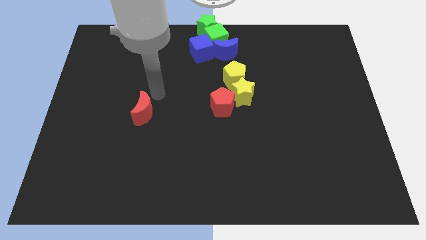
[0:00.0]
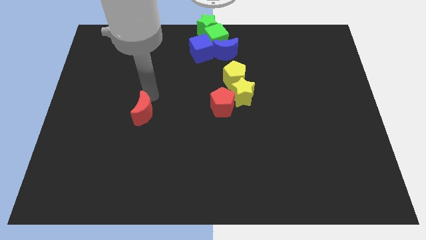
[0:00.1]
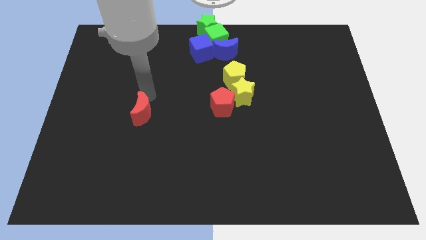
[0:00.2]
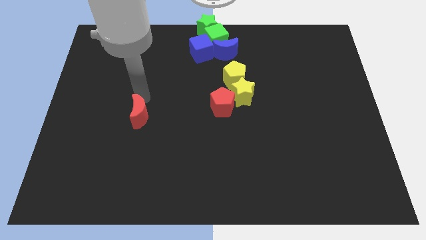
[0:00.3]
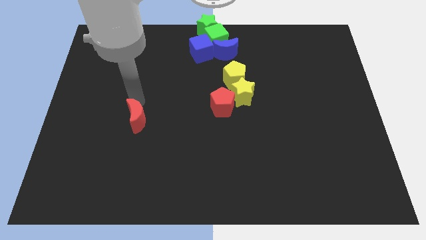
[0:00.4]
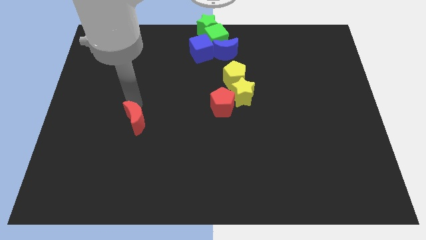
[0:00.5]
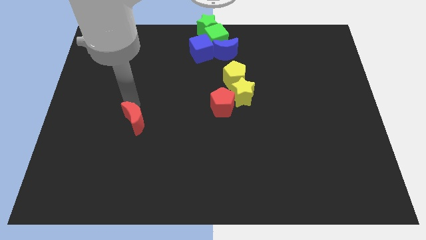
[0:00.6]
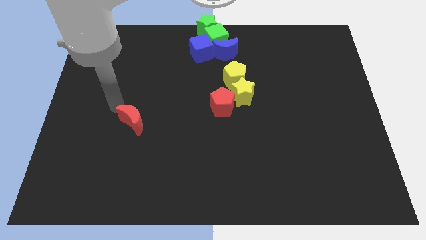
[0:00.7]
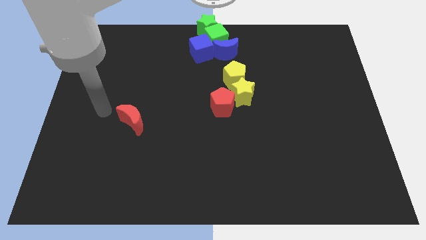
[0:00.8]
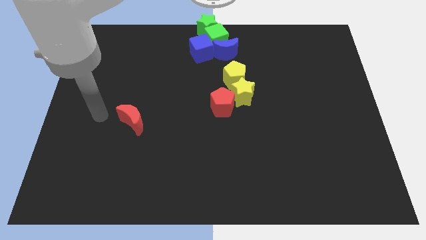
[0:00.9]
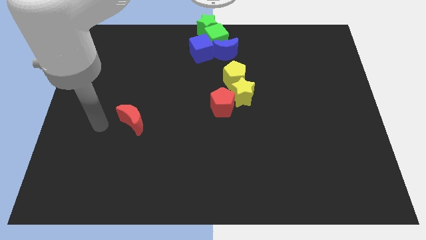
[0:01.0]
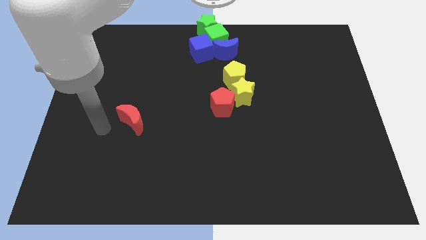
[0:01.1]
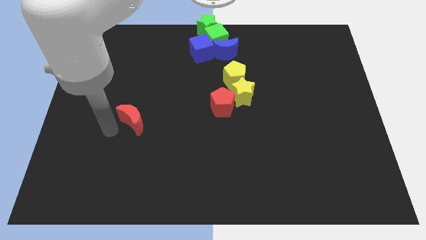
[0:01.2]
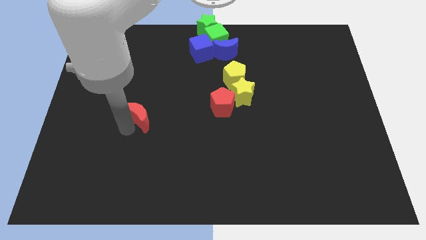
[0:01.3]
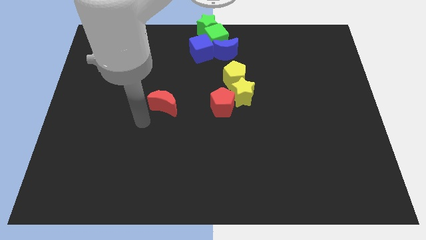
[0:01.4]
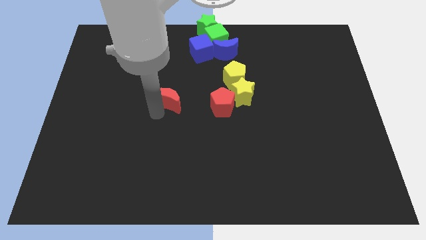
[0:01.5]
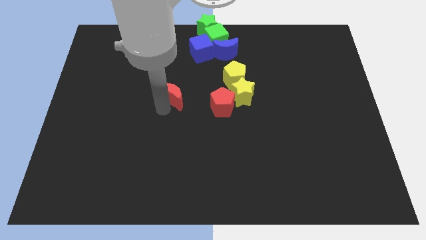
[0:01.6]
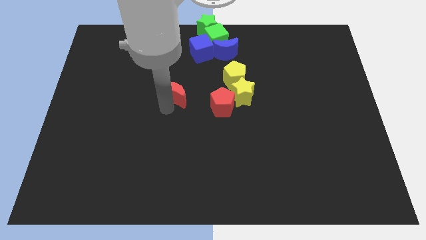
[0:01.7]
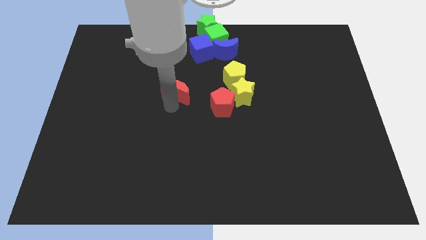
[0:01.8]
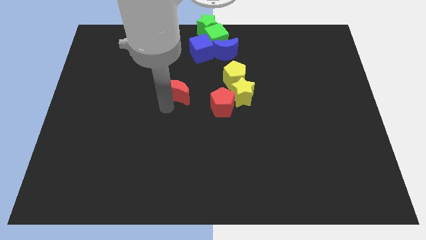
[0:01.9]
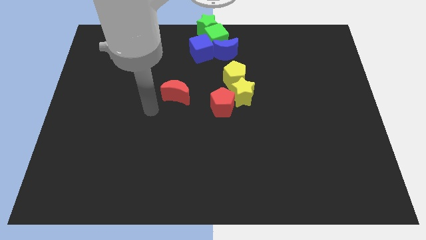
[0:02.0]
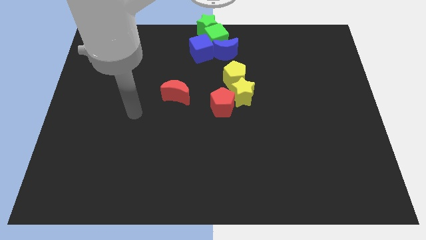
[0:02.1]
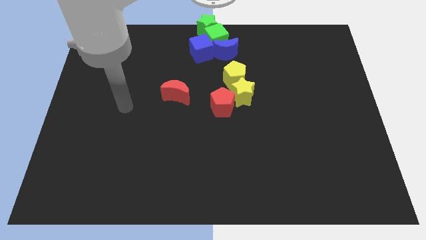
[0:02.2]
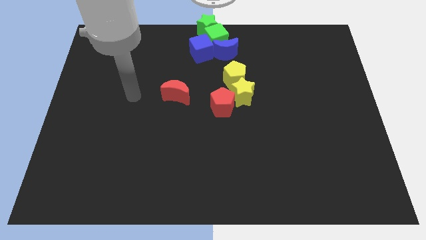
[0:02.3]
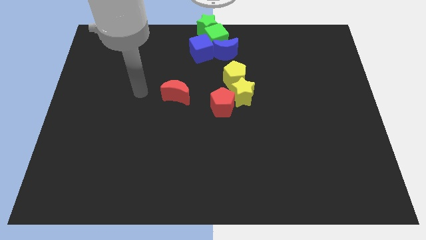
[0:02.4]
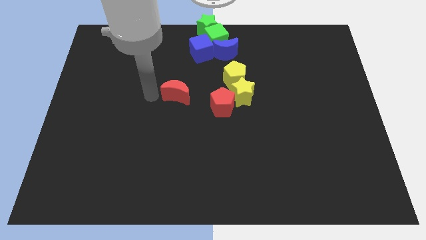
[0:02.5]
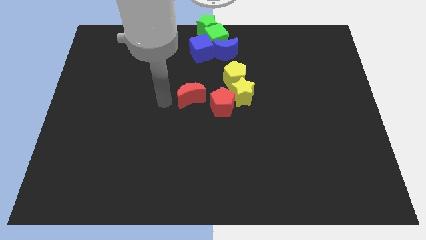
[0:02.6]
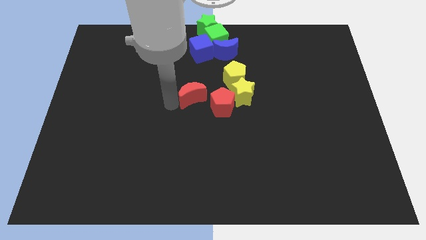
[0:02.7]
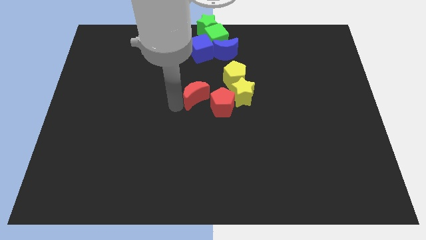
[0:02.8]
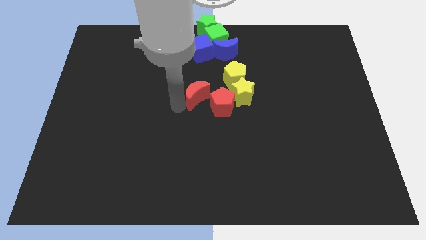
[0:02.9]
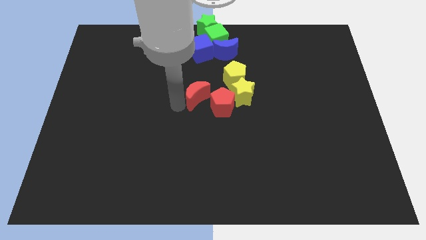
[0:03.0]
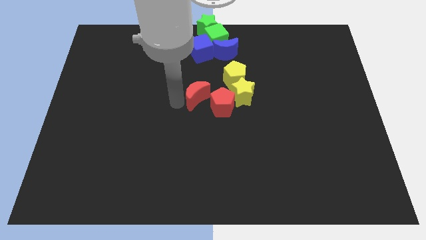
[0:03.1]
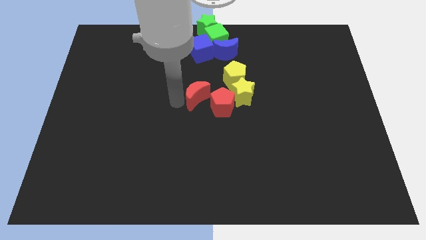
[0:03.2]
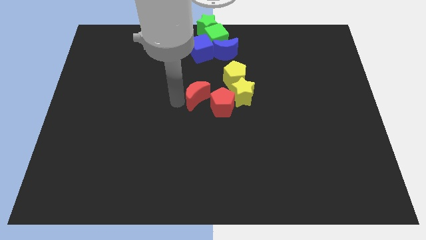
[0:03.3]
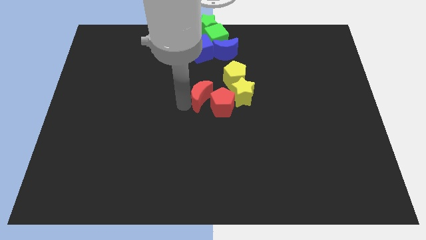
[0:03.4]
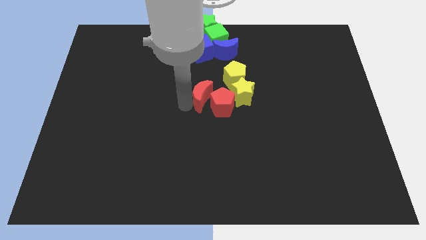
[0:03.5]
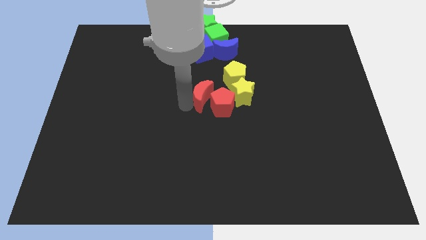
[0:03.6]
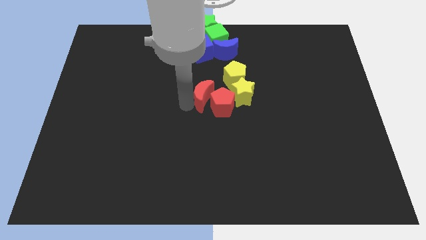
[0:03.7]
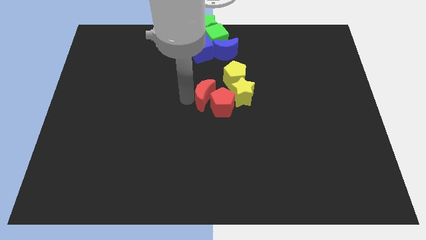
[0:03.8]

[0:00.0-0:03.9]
move the red crescent parallel left to the red pentagon

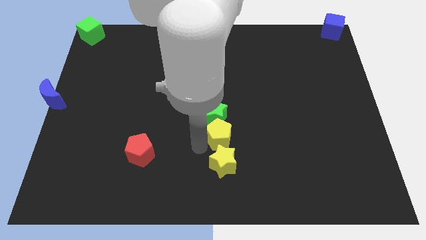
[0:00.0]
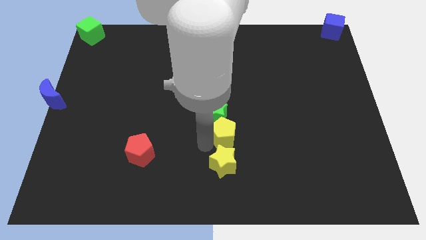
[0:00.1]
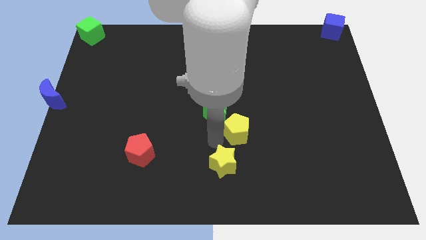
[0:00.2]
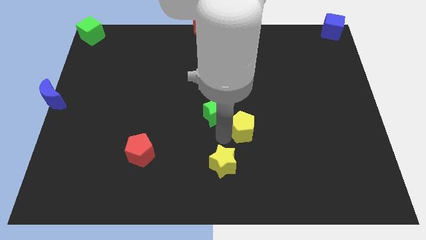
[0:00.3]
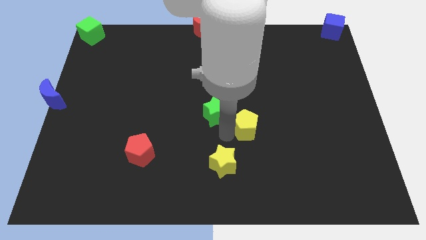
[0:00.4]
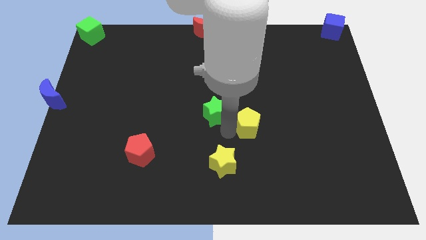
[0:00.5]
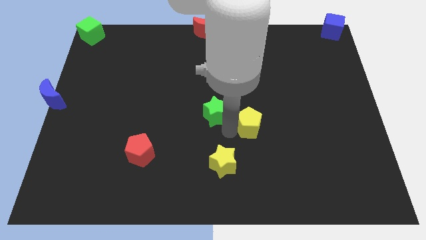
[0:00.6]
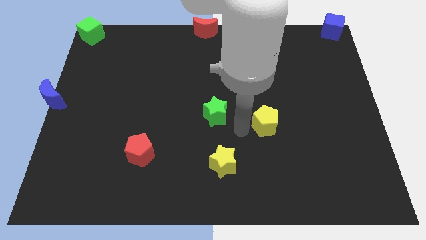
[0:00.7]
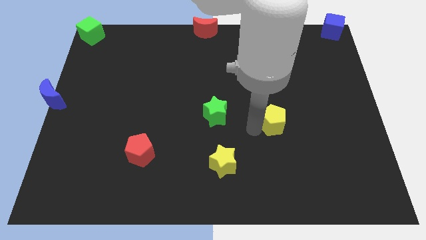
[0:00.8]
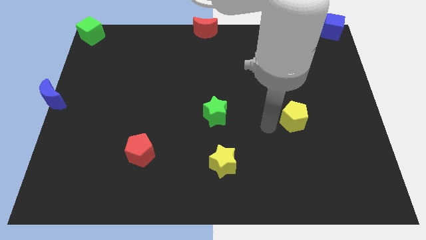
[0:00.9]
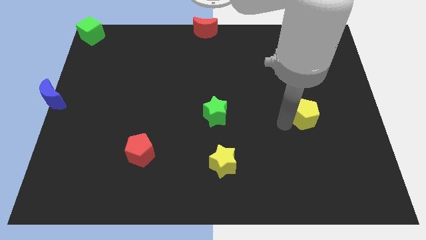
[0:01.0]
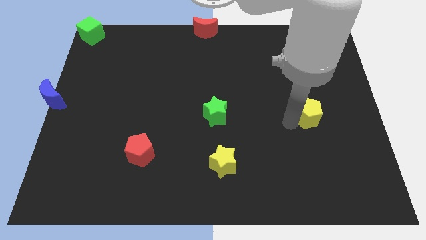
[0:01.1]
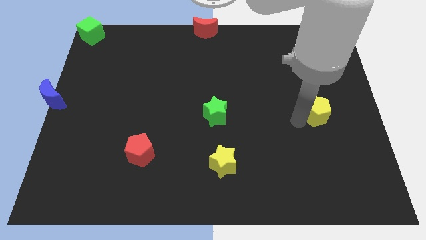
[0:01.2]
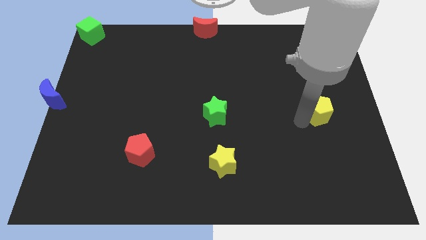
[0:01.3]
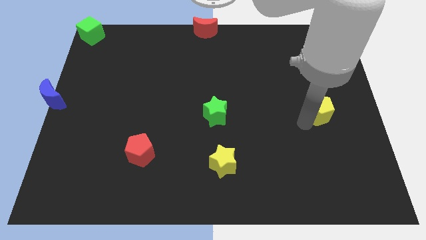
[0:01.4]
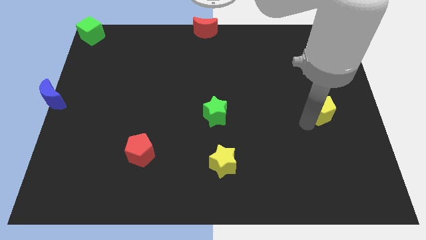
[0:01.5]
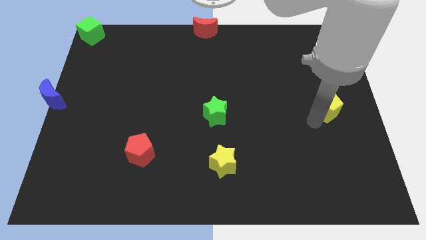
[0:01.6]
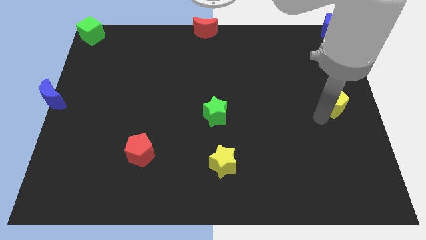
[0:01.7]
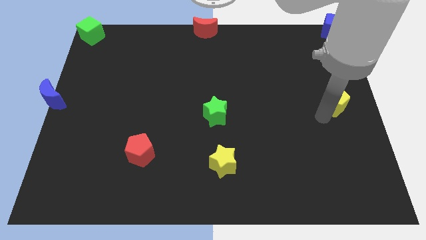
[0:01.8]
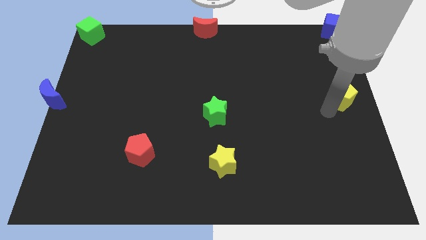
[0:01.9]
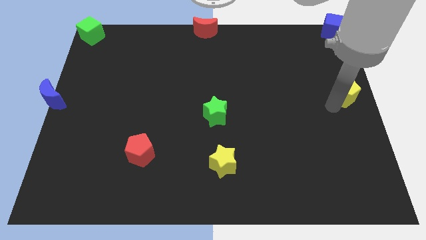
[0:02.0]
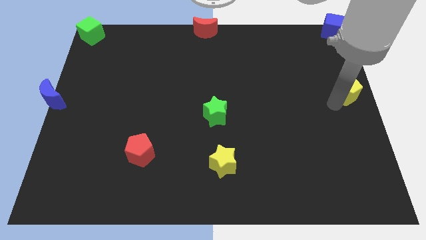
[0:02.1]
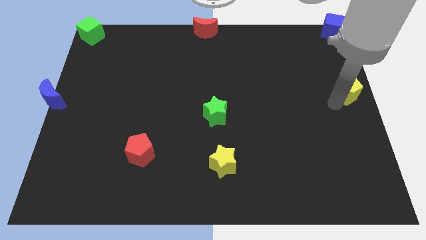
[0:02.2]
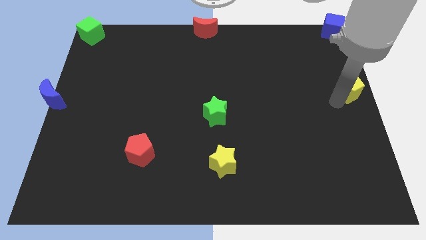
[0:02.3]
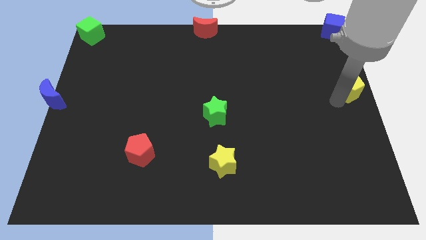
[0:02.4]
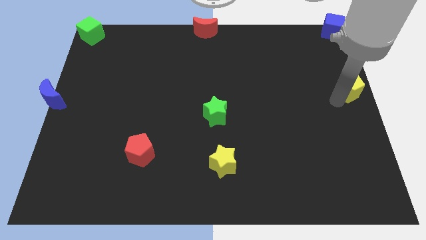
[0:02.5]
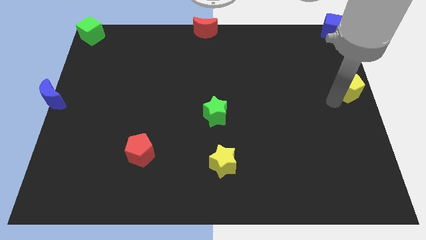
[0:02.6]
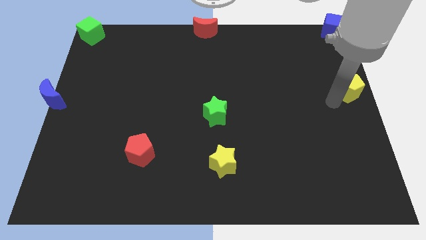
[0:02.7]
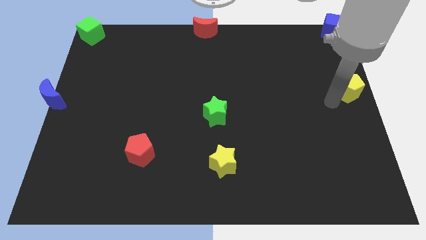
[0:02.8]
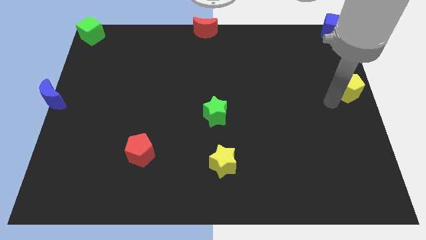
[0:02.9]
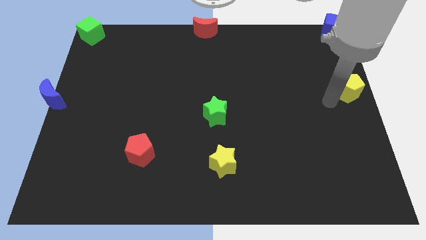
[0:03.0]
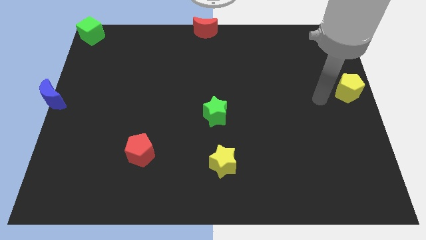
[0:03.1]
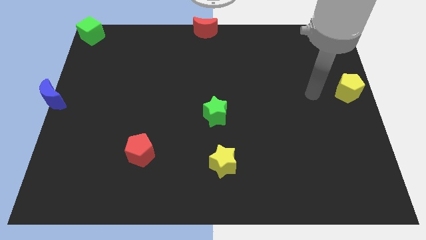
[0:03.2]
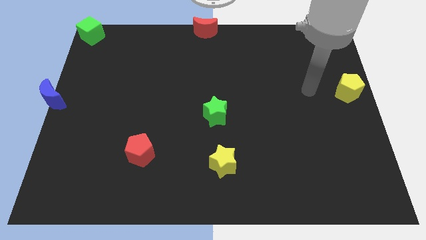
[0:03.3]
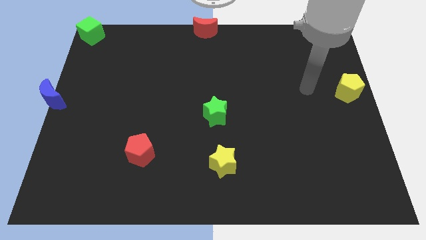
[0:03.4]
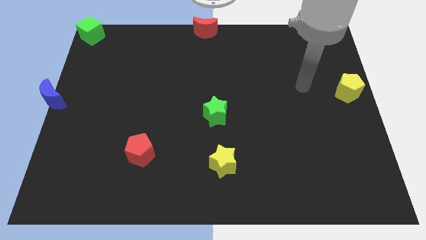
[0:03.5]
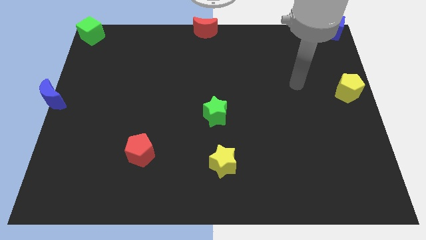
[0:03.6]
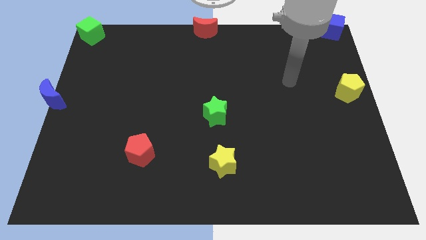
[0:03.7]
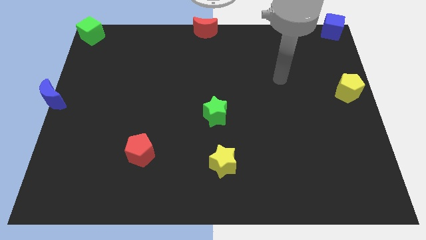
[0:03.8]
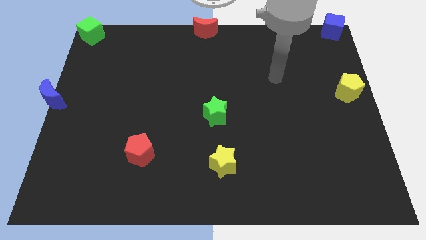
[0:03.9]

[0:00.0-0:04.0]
place the yellow pentagon vertically below the blue cube

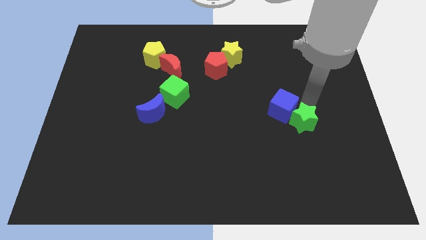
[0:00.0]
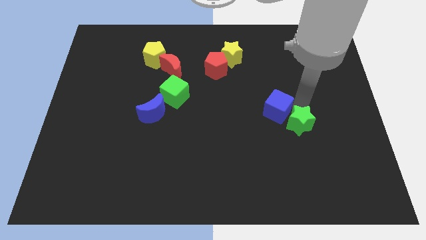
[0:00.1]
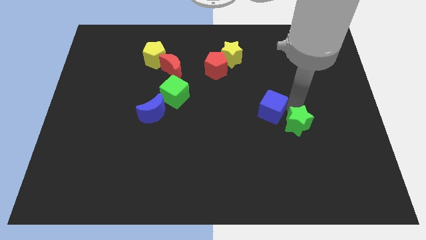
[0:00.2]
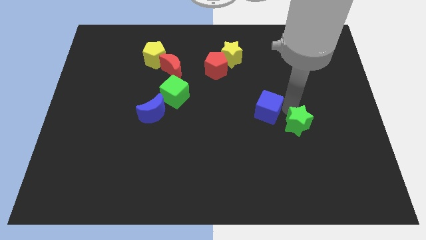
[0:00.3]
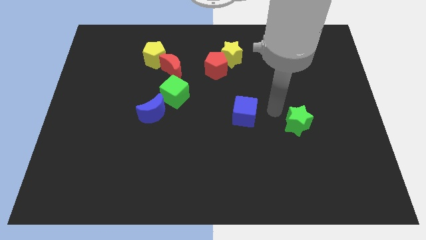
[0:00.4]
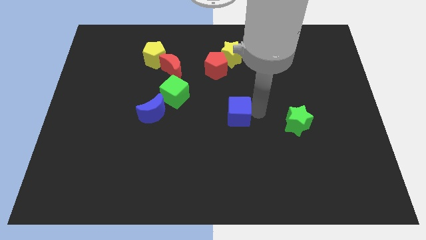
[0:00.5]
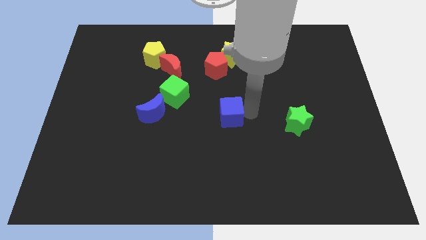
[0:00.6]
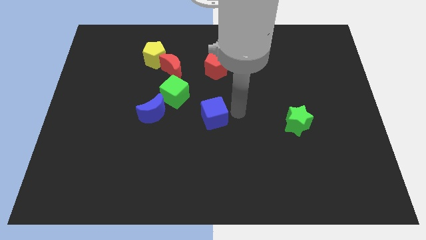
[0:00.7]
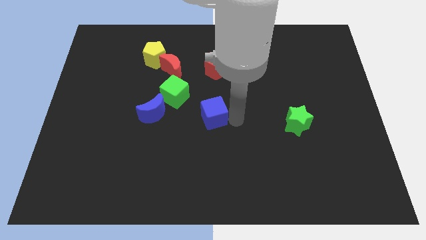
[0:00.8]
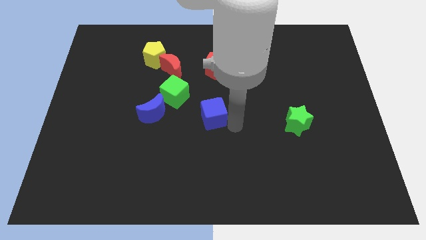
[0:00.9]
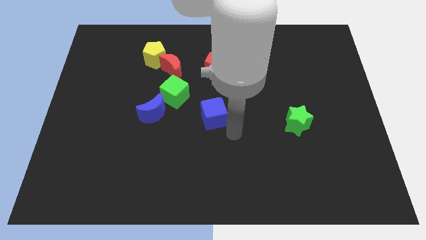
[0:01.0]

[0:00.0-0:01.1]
place the blue cube towards the center of the board
